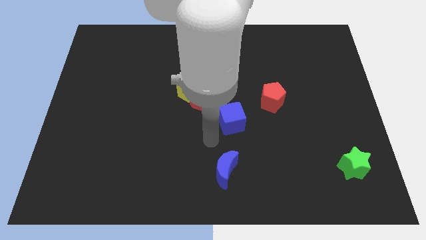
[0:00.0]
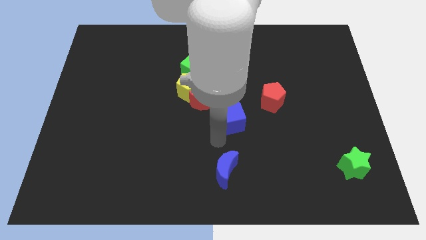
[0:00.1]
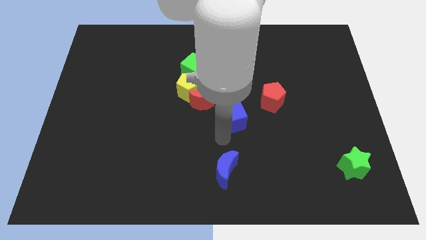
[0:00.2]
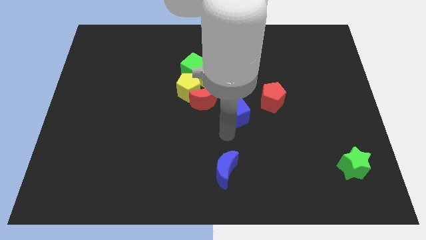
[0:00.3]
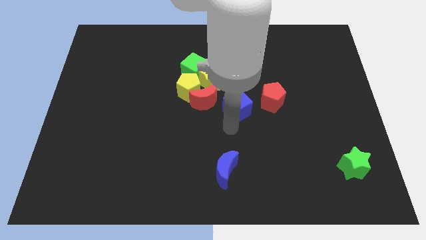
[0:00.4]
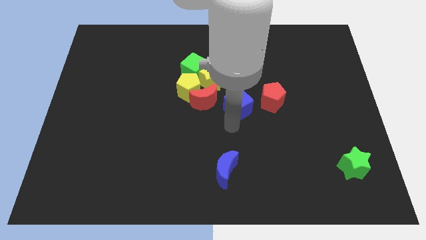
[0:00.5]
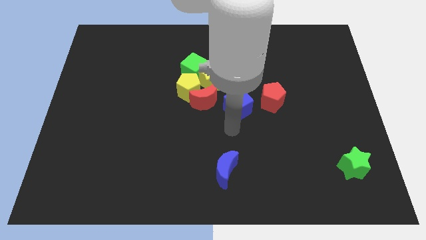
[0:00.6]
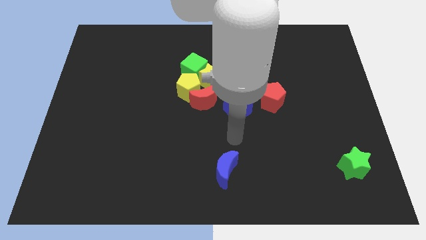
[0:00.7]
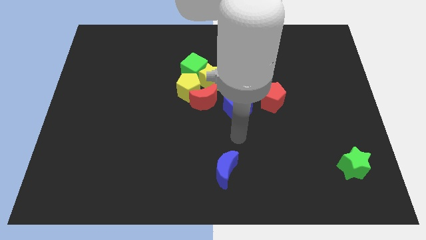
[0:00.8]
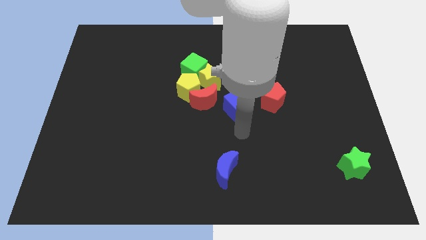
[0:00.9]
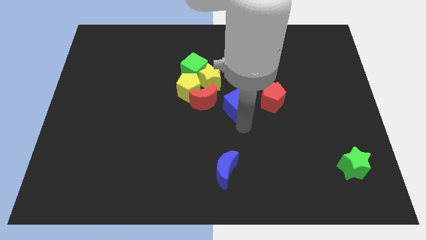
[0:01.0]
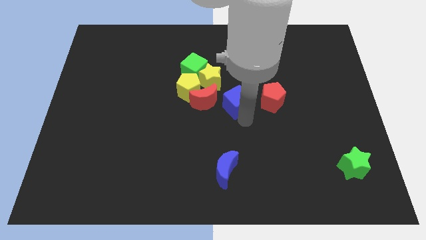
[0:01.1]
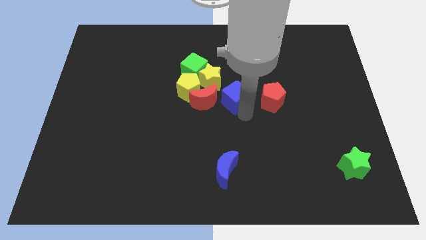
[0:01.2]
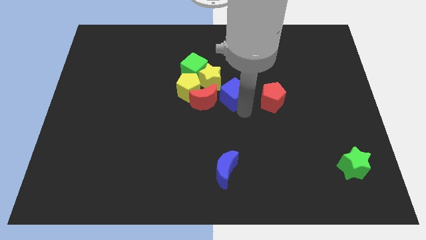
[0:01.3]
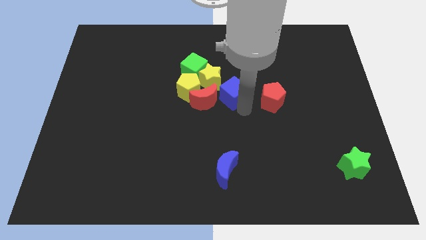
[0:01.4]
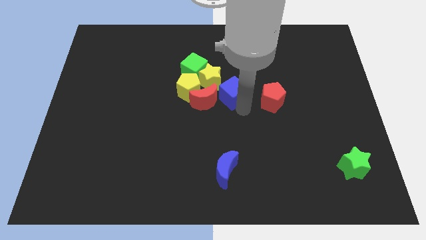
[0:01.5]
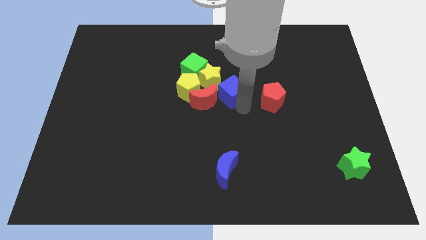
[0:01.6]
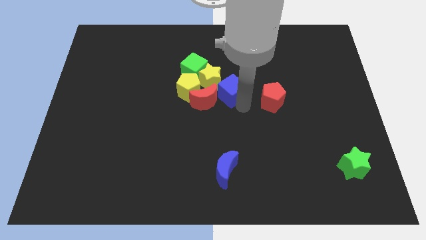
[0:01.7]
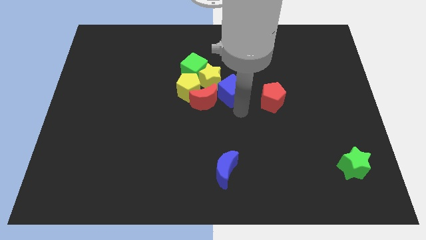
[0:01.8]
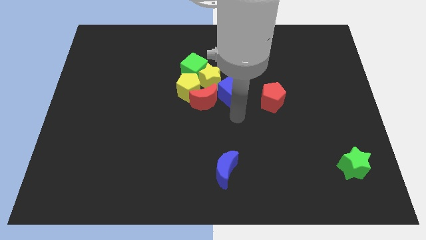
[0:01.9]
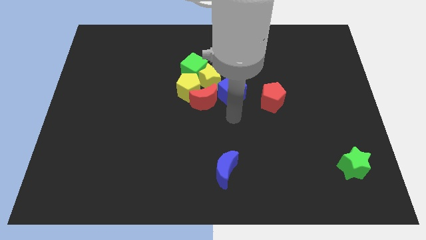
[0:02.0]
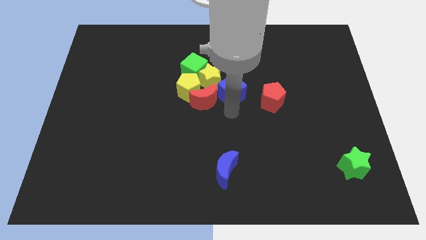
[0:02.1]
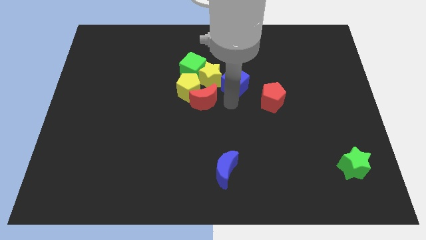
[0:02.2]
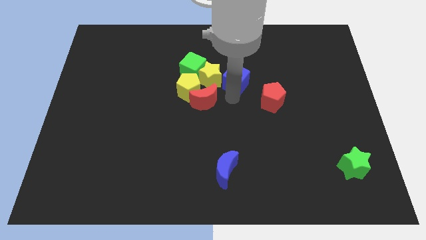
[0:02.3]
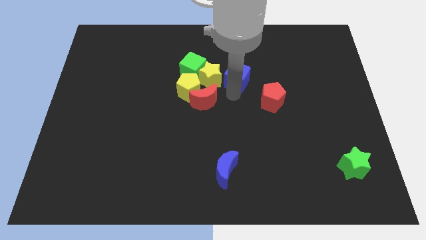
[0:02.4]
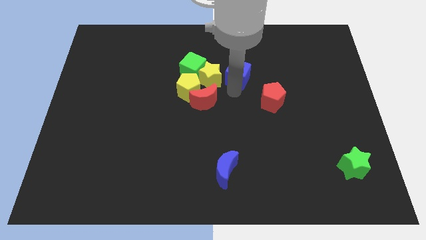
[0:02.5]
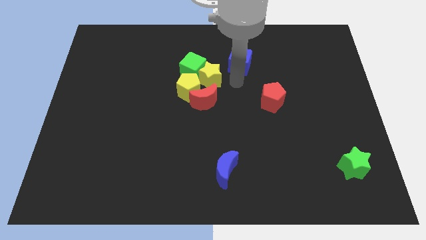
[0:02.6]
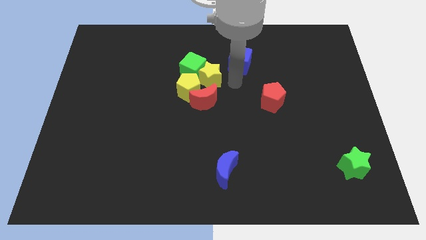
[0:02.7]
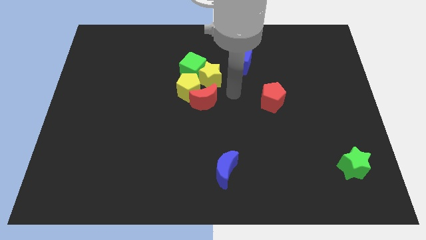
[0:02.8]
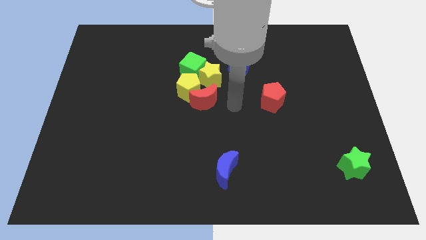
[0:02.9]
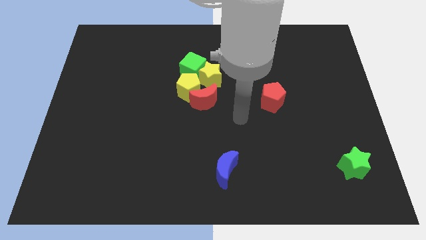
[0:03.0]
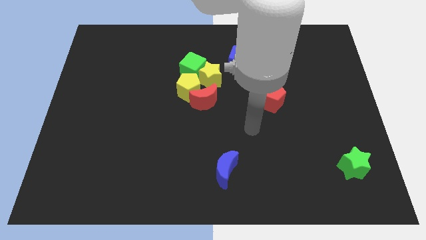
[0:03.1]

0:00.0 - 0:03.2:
push the blue cube to the top

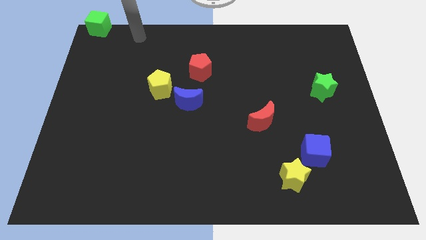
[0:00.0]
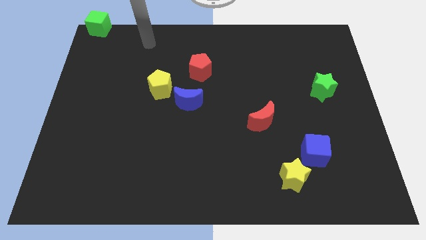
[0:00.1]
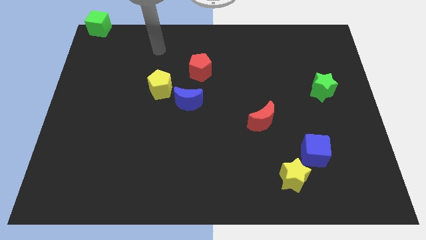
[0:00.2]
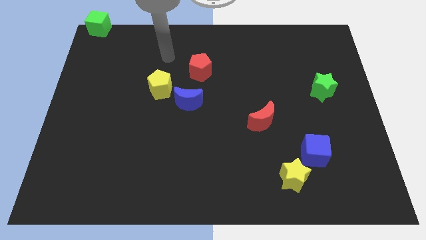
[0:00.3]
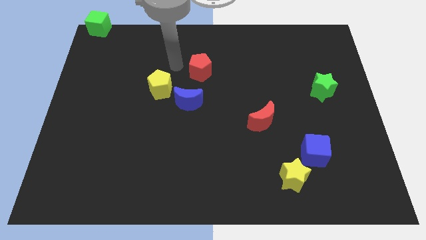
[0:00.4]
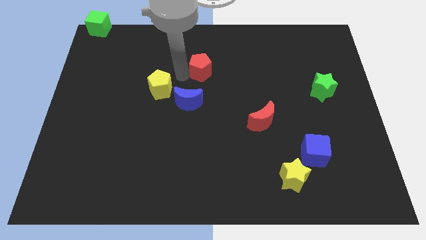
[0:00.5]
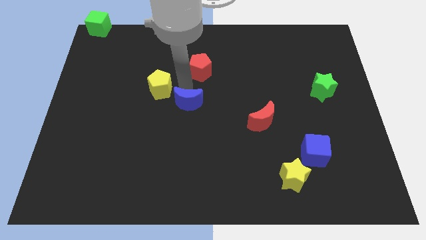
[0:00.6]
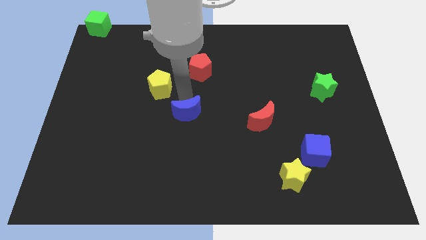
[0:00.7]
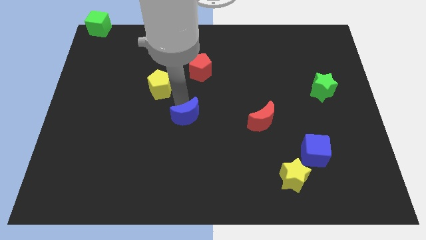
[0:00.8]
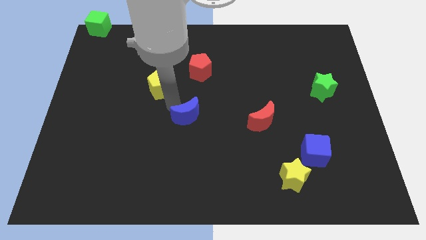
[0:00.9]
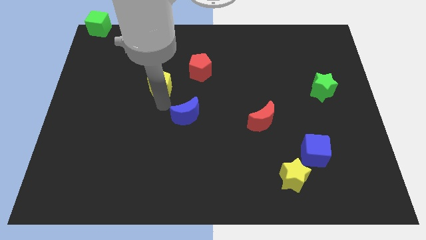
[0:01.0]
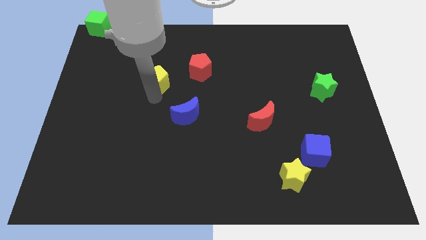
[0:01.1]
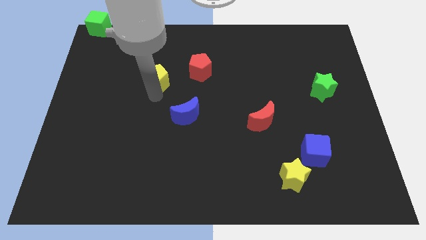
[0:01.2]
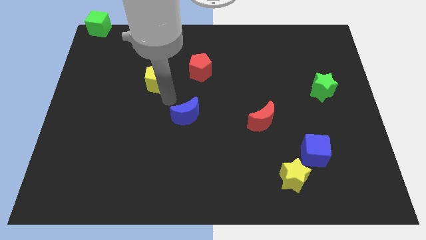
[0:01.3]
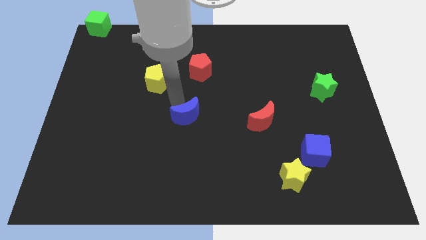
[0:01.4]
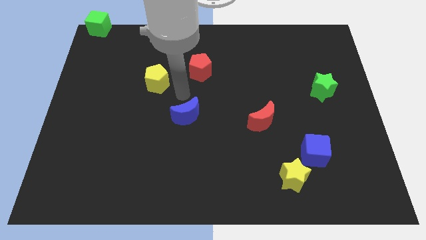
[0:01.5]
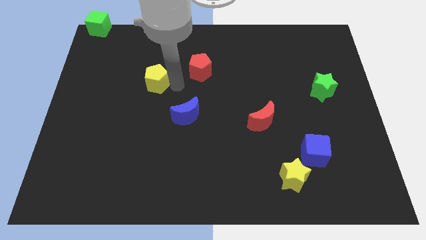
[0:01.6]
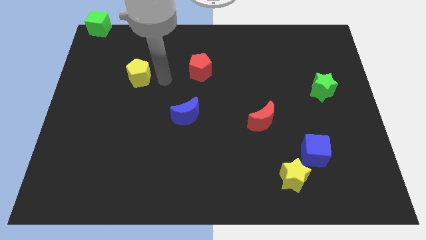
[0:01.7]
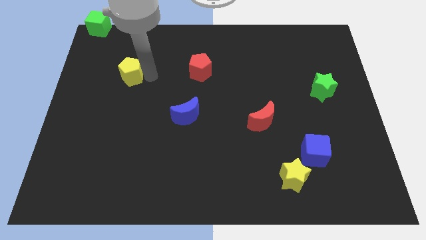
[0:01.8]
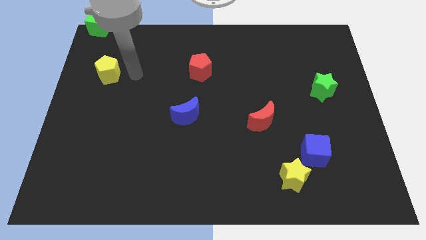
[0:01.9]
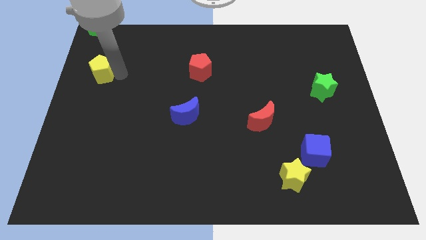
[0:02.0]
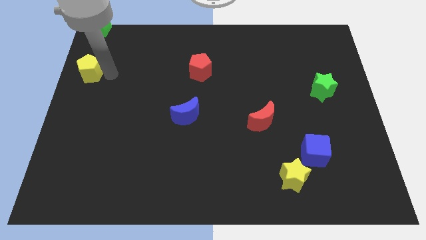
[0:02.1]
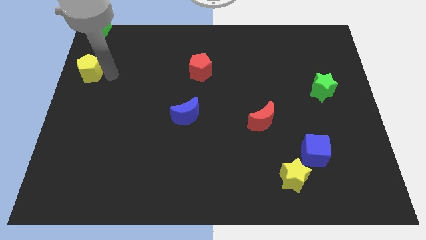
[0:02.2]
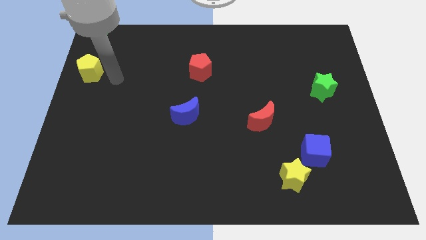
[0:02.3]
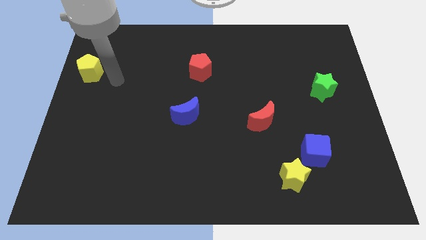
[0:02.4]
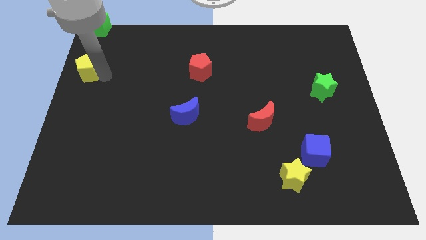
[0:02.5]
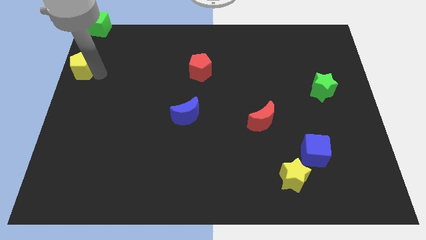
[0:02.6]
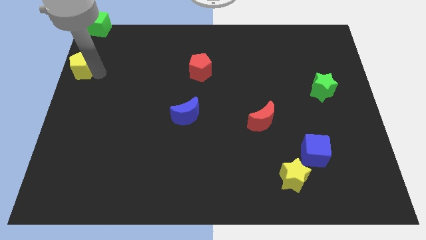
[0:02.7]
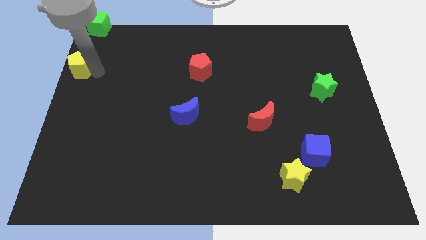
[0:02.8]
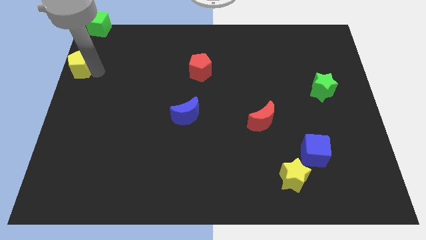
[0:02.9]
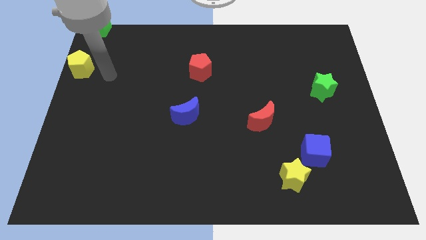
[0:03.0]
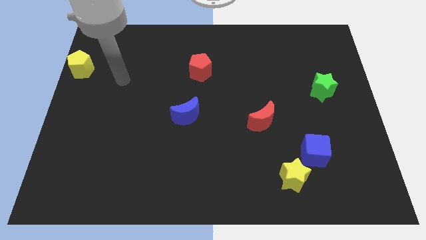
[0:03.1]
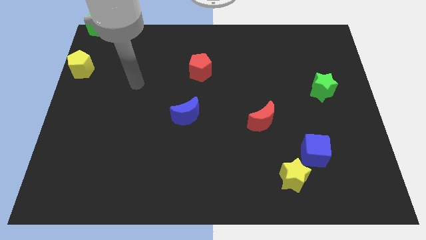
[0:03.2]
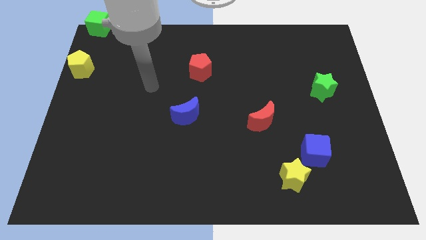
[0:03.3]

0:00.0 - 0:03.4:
push the yellow pentagon to left side of the board

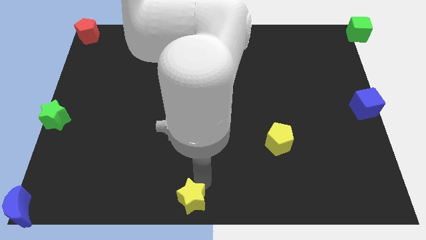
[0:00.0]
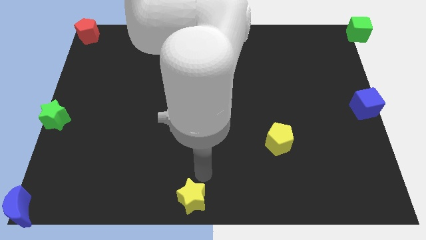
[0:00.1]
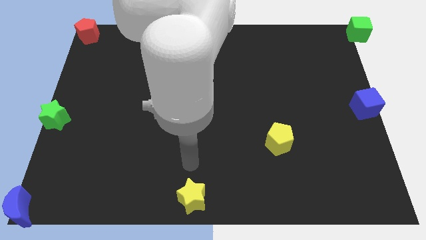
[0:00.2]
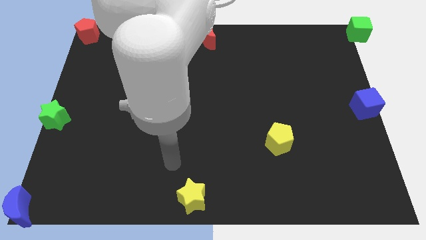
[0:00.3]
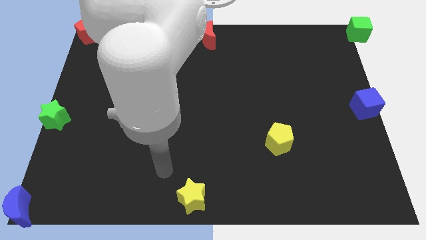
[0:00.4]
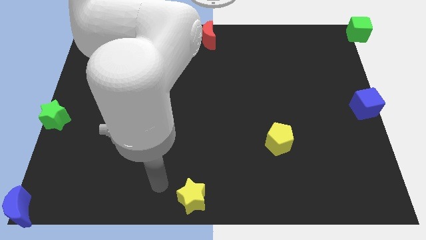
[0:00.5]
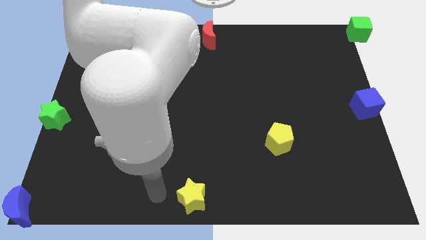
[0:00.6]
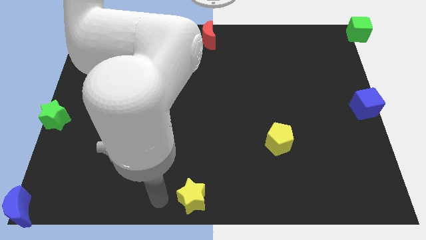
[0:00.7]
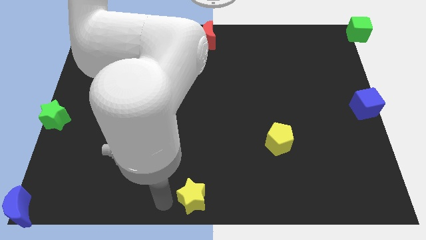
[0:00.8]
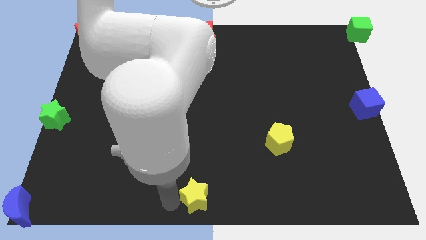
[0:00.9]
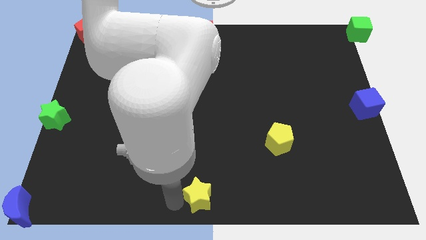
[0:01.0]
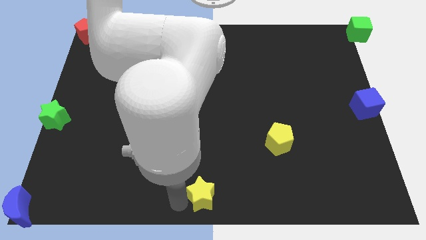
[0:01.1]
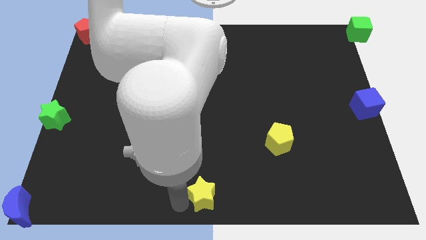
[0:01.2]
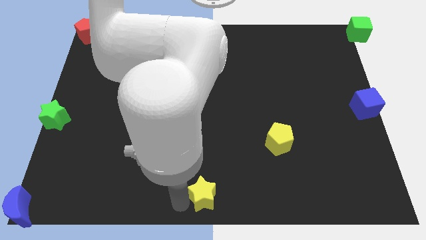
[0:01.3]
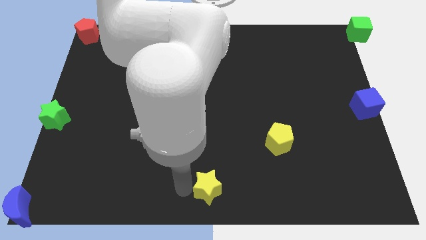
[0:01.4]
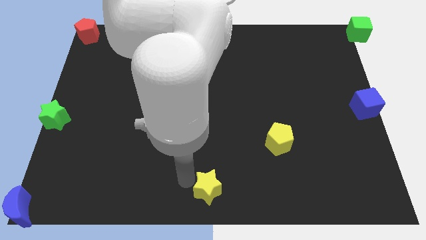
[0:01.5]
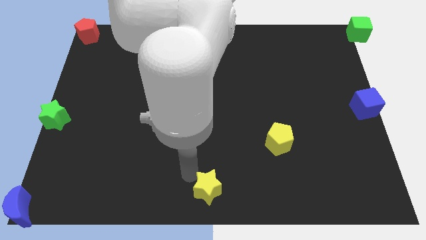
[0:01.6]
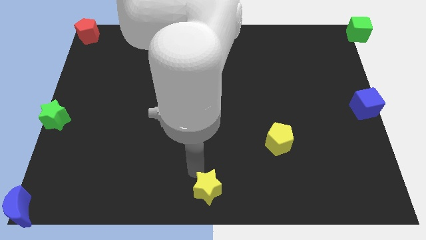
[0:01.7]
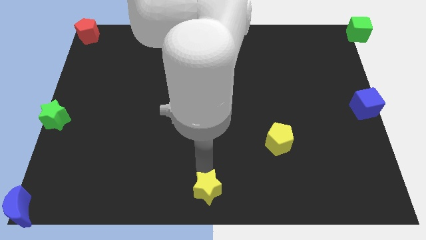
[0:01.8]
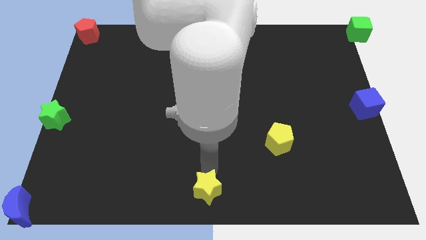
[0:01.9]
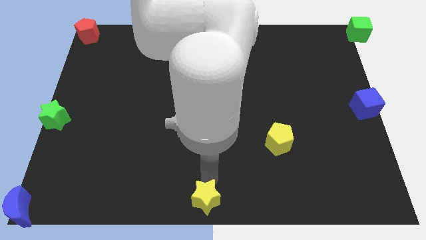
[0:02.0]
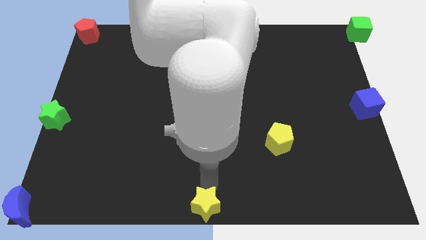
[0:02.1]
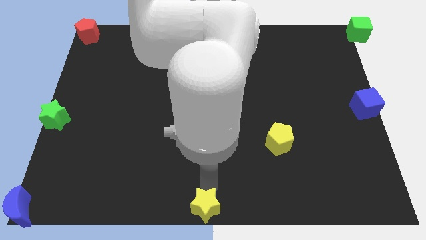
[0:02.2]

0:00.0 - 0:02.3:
put the yellow star at the bottom center

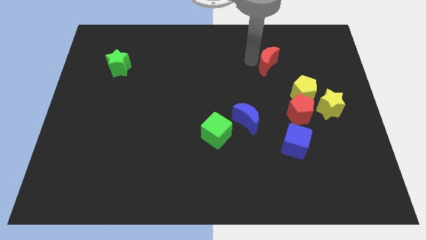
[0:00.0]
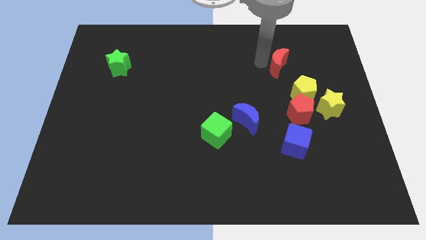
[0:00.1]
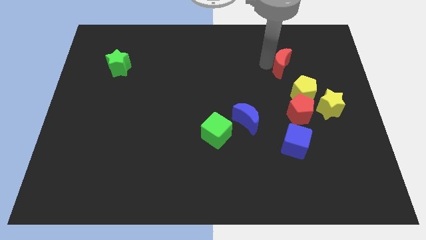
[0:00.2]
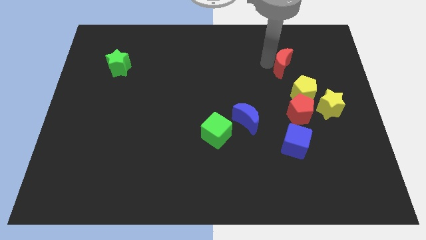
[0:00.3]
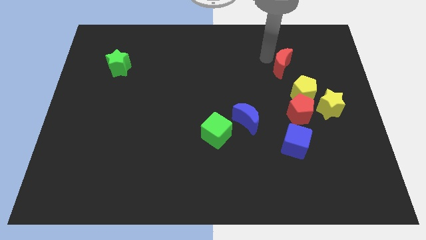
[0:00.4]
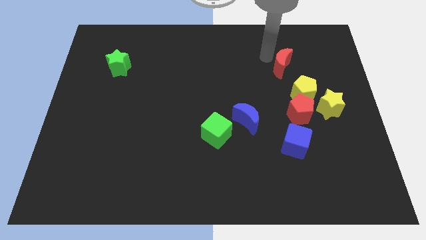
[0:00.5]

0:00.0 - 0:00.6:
push red moon slightly to the right
